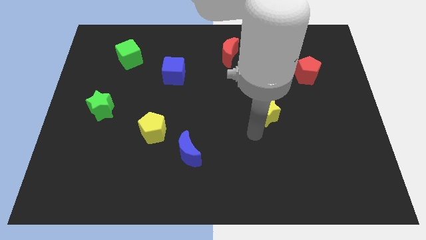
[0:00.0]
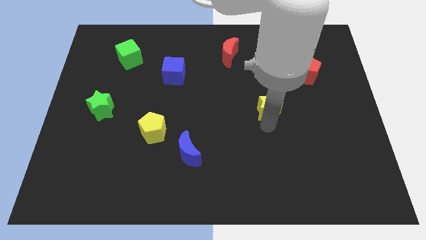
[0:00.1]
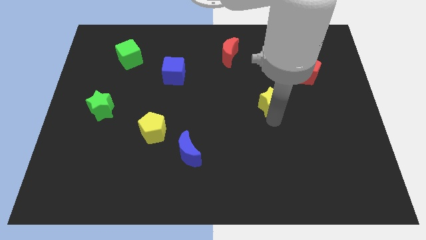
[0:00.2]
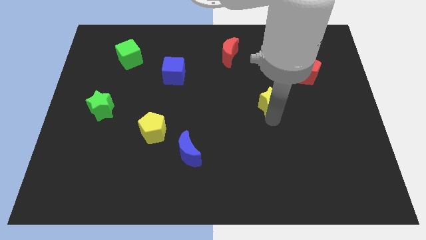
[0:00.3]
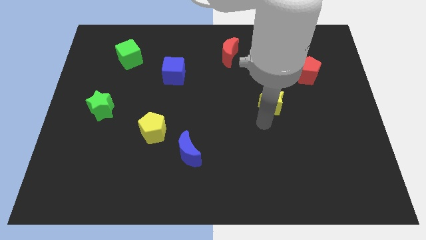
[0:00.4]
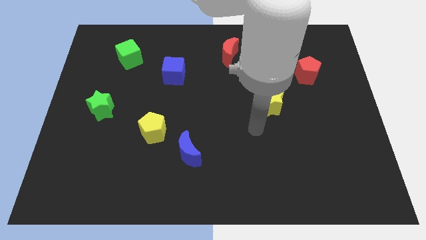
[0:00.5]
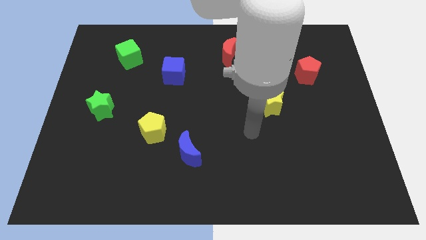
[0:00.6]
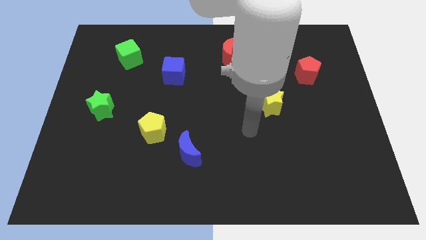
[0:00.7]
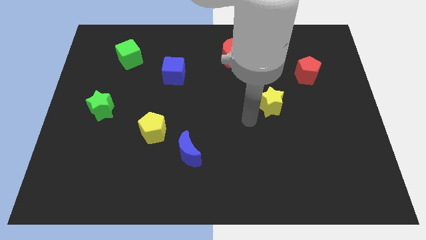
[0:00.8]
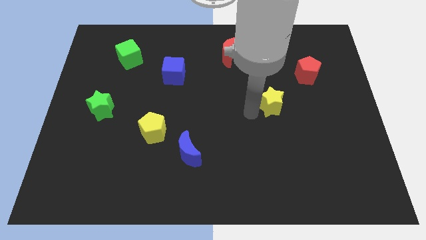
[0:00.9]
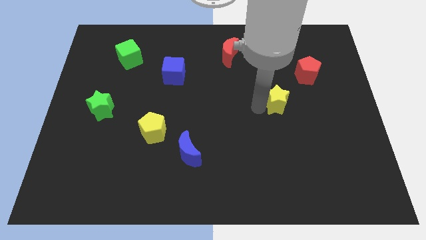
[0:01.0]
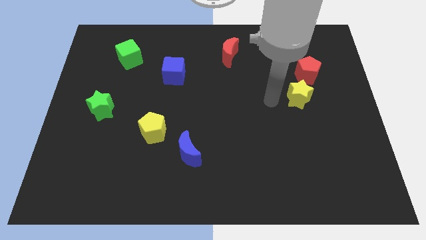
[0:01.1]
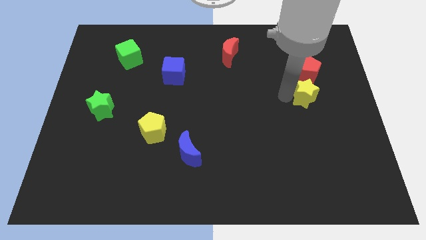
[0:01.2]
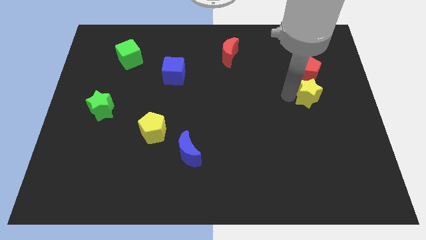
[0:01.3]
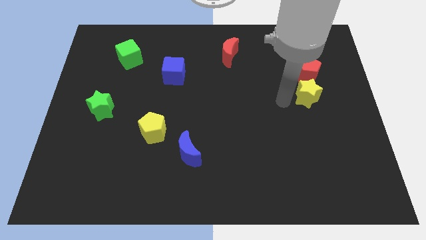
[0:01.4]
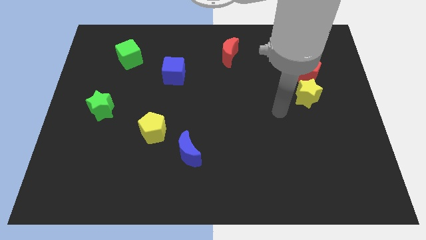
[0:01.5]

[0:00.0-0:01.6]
put the yellow star vertically below the red pentagon

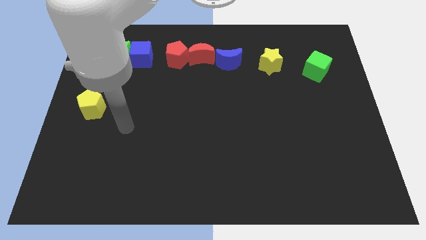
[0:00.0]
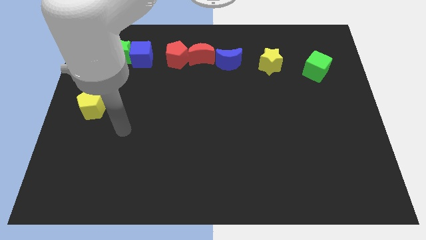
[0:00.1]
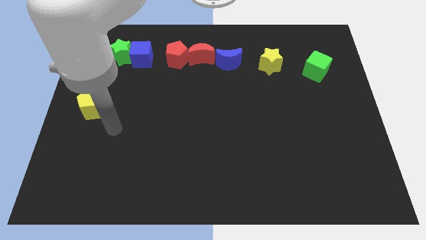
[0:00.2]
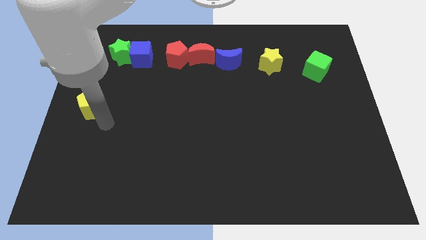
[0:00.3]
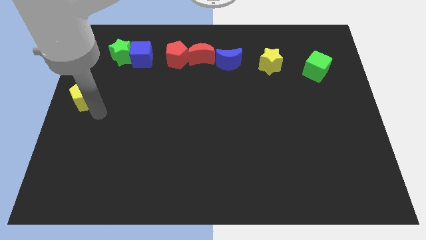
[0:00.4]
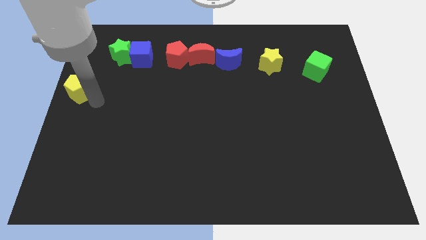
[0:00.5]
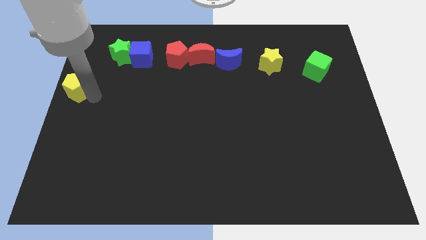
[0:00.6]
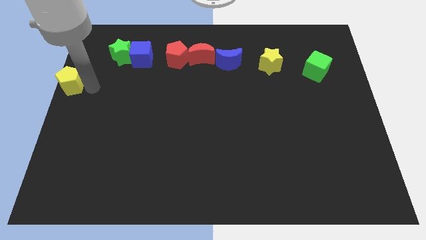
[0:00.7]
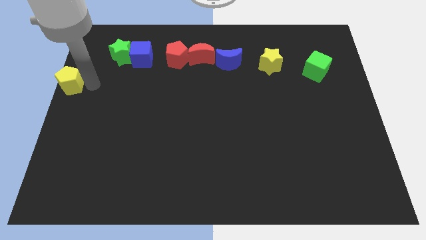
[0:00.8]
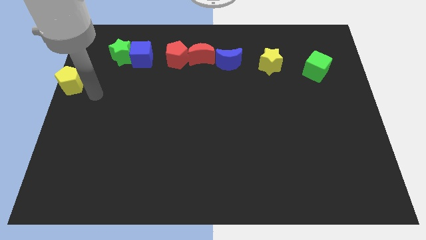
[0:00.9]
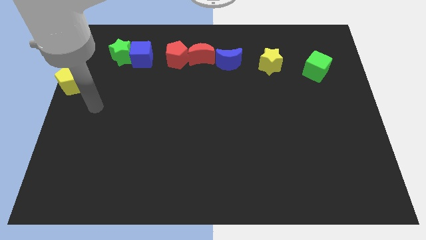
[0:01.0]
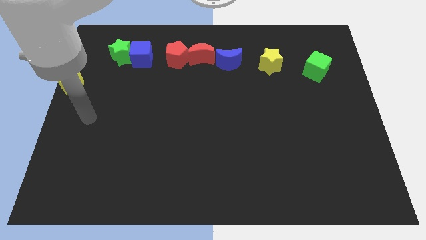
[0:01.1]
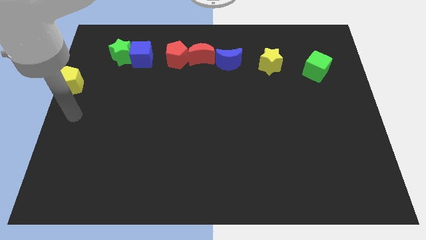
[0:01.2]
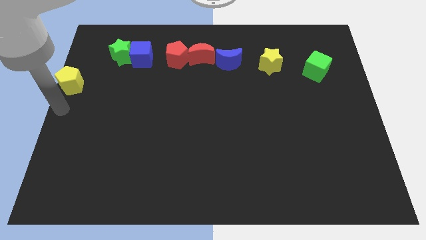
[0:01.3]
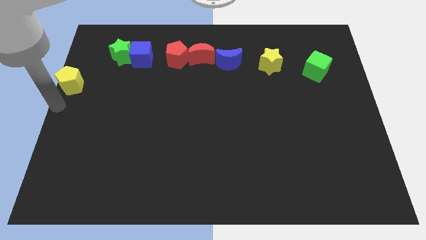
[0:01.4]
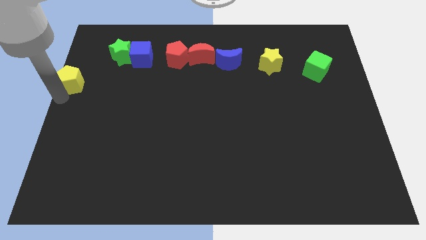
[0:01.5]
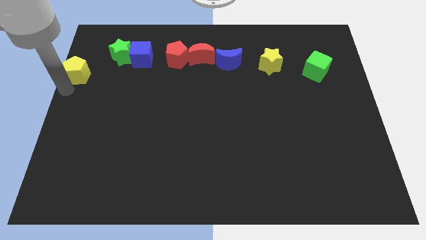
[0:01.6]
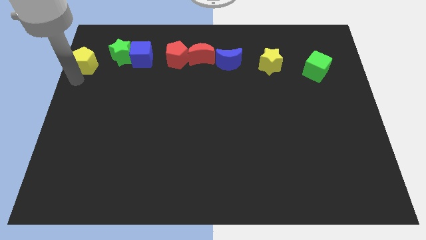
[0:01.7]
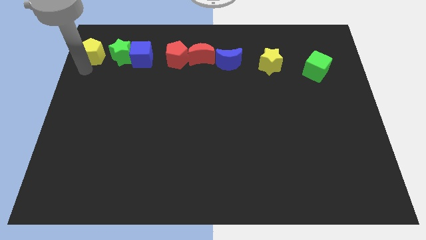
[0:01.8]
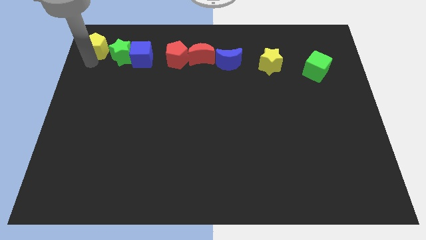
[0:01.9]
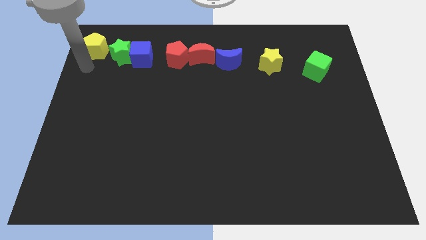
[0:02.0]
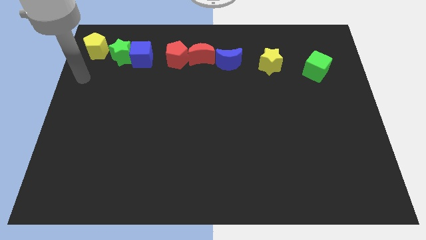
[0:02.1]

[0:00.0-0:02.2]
place the yellow pentagon left to green star

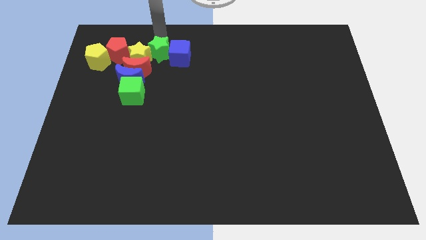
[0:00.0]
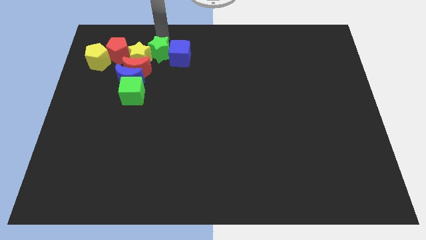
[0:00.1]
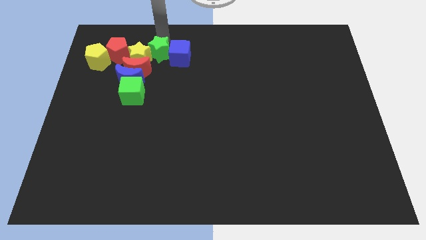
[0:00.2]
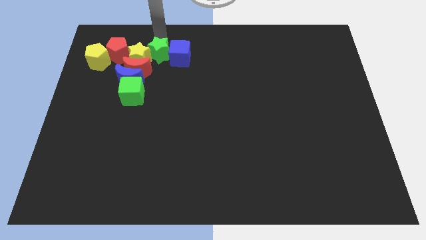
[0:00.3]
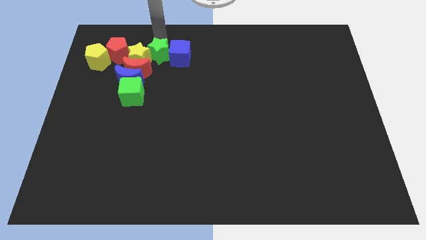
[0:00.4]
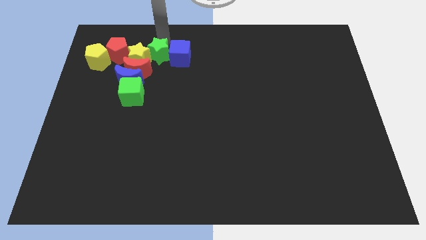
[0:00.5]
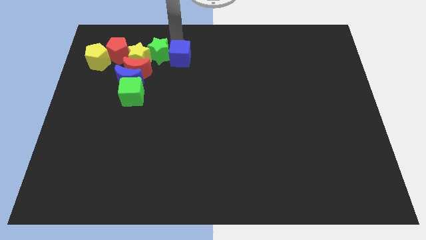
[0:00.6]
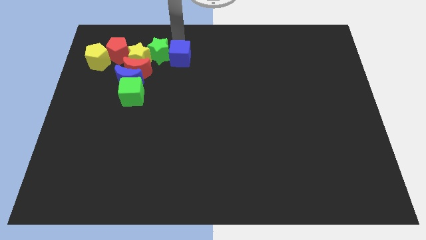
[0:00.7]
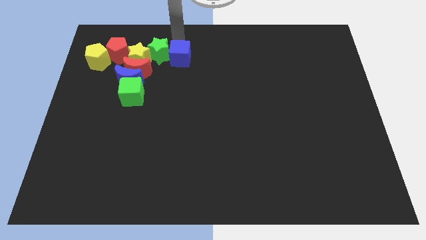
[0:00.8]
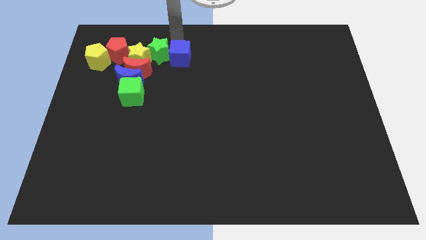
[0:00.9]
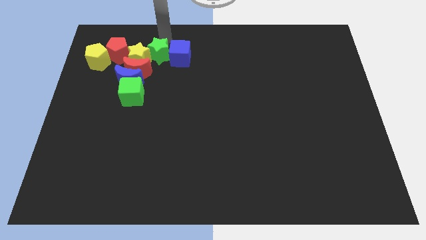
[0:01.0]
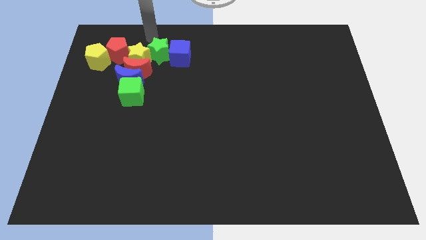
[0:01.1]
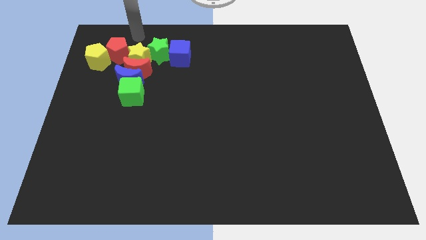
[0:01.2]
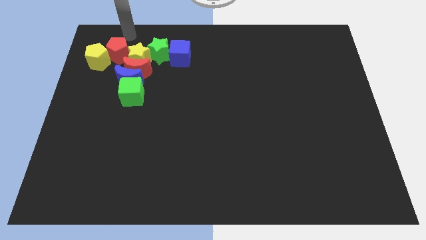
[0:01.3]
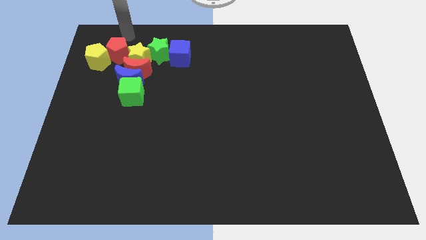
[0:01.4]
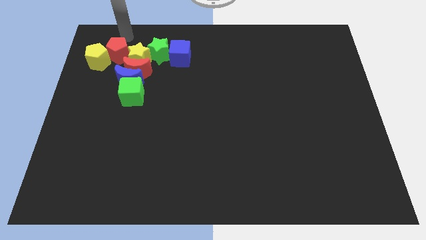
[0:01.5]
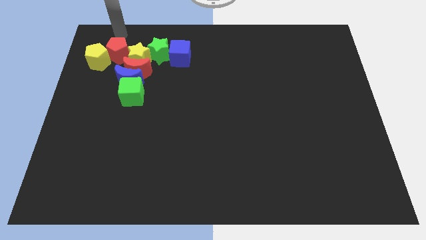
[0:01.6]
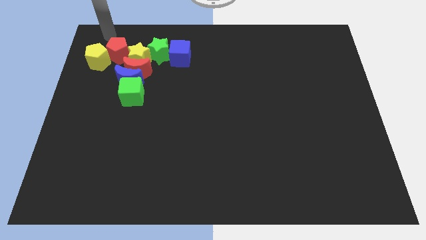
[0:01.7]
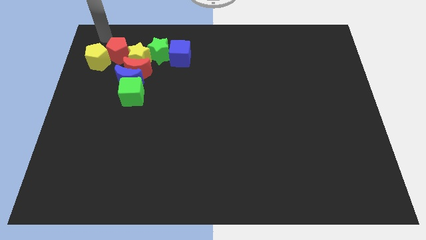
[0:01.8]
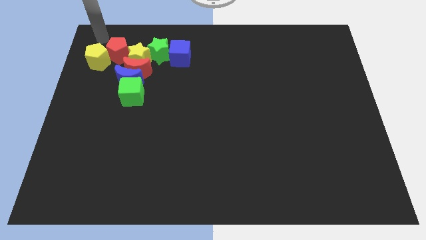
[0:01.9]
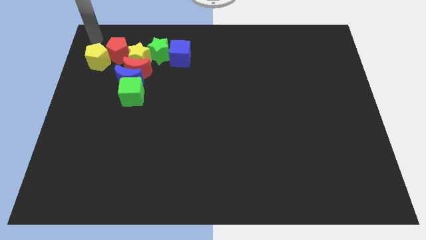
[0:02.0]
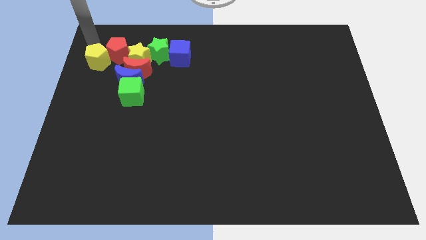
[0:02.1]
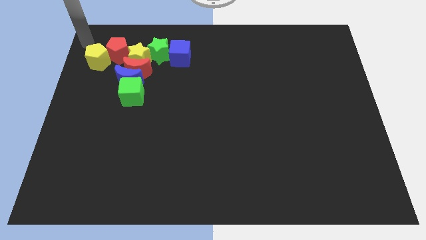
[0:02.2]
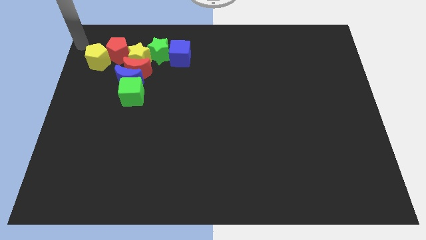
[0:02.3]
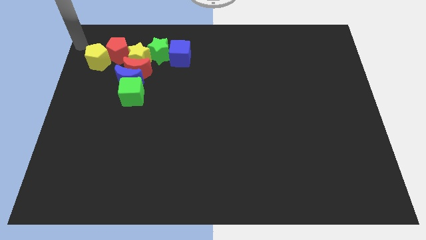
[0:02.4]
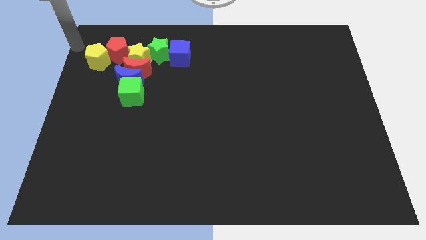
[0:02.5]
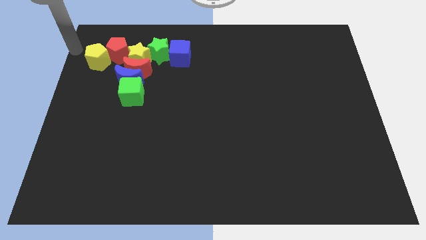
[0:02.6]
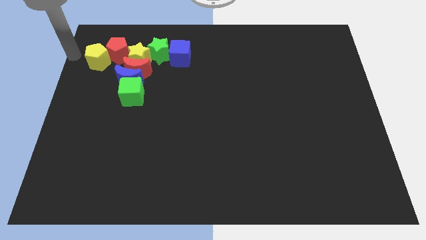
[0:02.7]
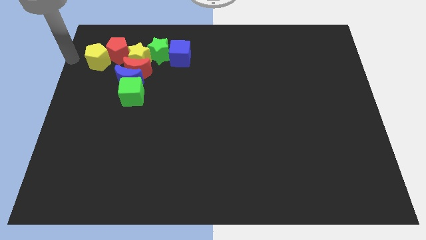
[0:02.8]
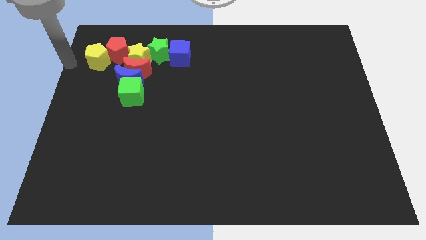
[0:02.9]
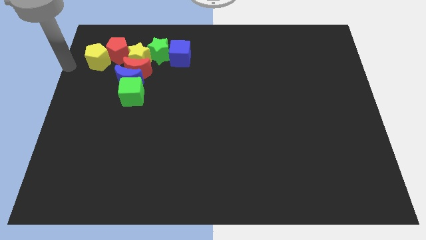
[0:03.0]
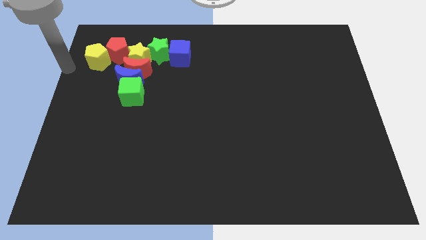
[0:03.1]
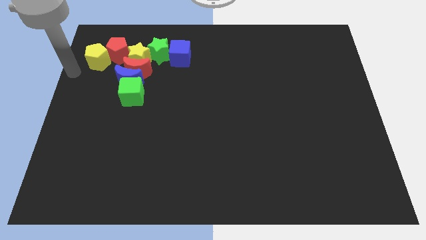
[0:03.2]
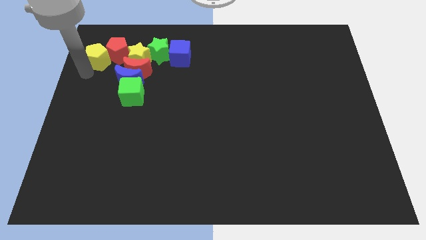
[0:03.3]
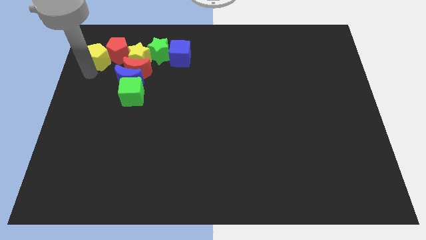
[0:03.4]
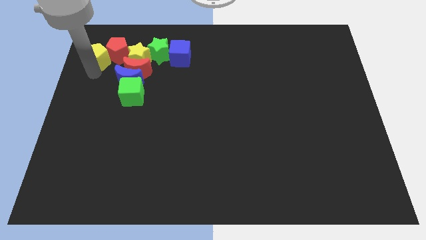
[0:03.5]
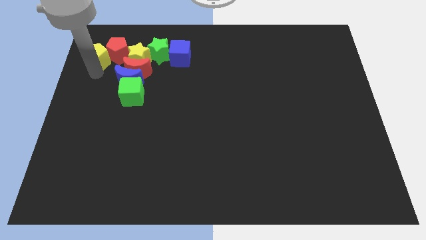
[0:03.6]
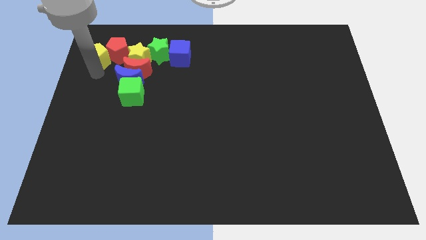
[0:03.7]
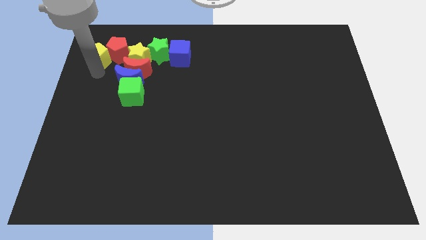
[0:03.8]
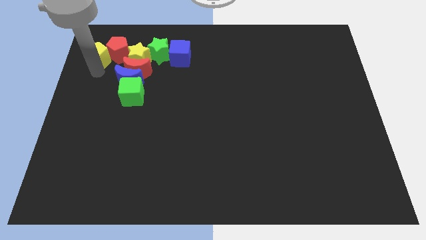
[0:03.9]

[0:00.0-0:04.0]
move your arm below the yellow pentagon

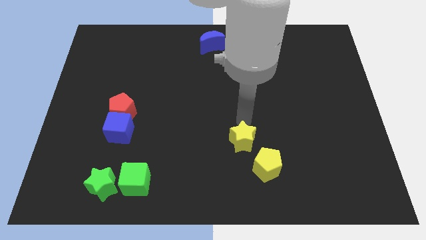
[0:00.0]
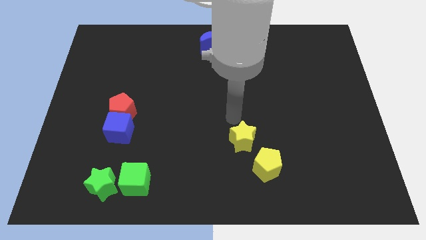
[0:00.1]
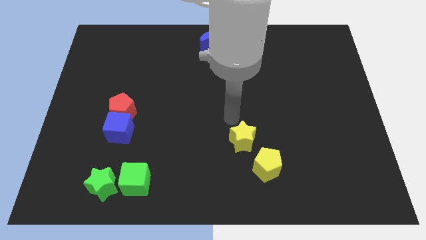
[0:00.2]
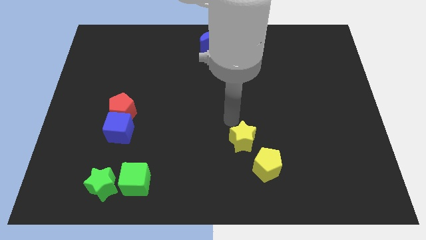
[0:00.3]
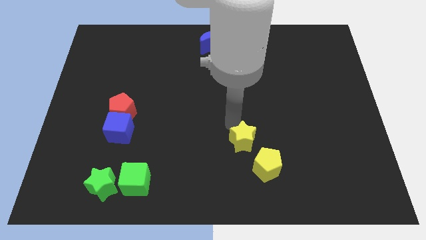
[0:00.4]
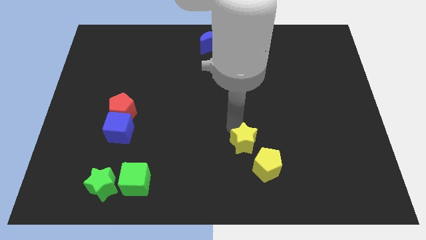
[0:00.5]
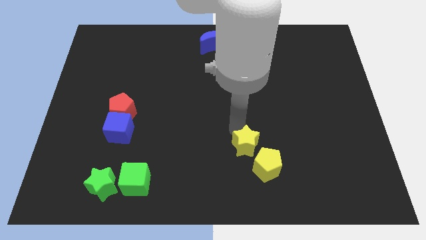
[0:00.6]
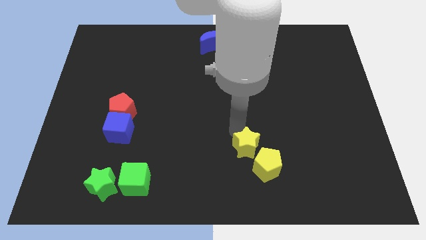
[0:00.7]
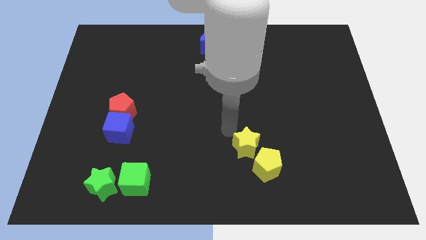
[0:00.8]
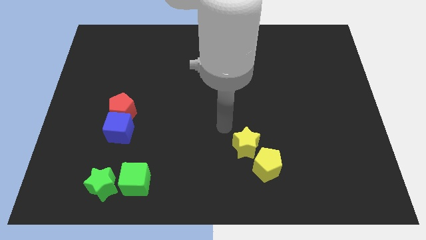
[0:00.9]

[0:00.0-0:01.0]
push the yellow star close to the yellow pentagon

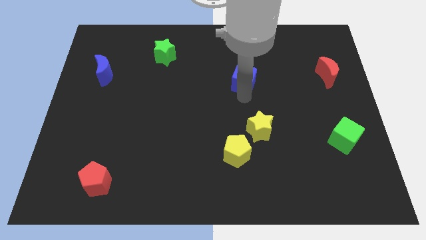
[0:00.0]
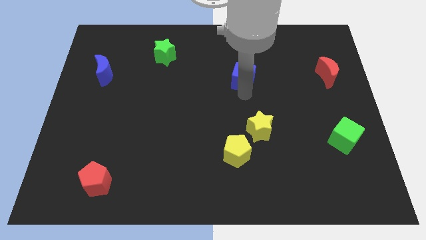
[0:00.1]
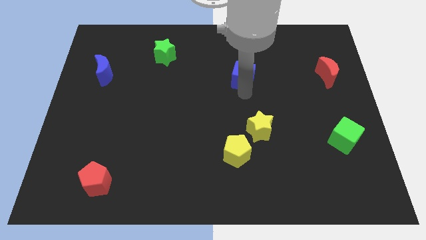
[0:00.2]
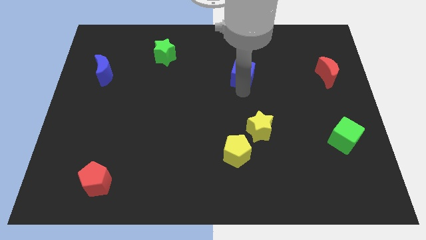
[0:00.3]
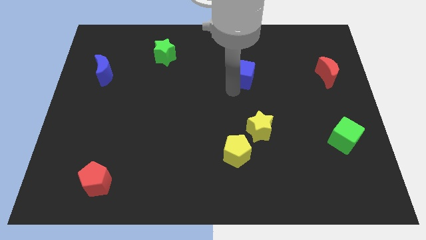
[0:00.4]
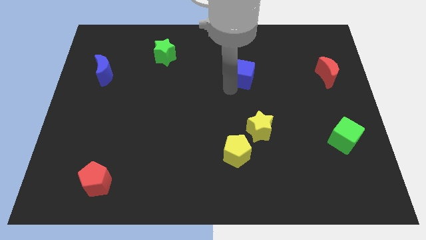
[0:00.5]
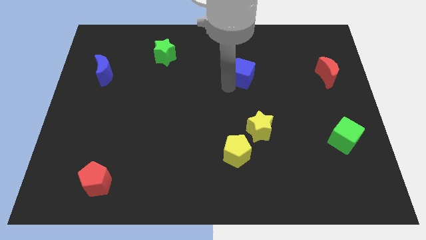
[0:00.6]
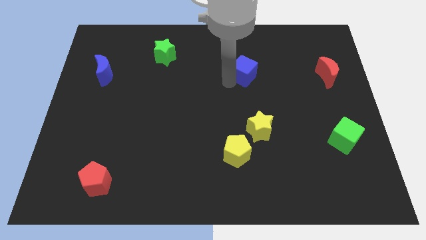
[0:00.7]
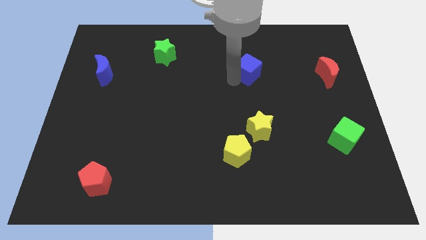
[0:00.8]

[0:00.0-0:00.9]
place the blue cube vertically above the yellow star
